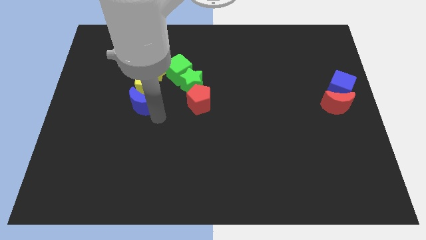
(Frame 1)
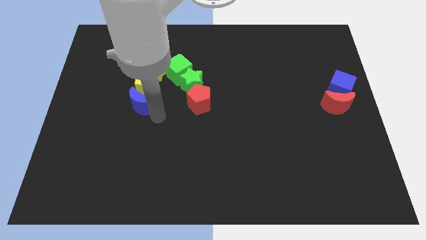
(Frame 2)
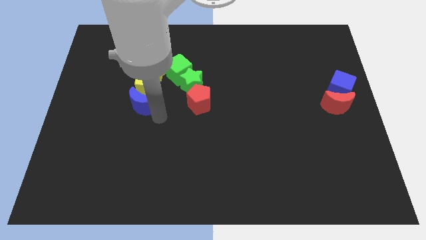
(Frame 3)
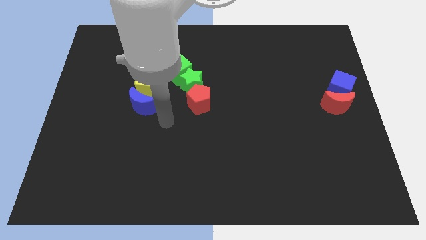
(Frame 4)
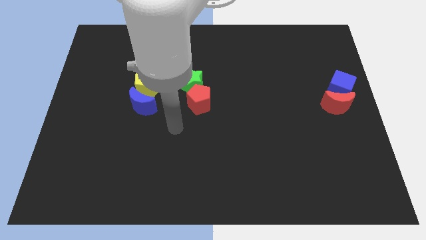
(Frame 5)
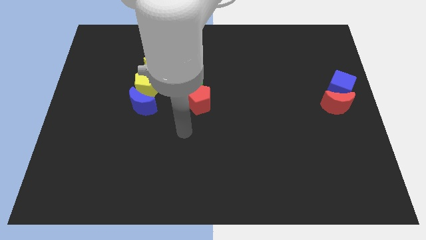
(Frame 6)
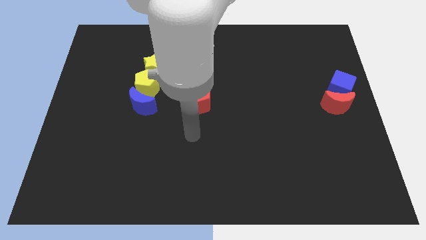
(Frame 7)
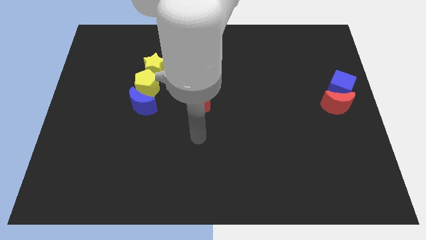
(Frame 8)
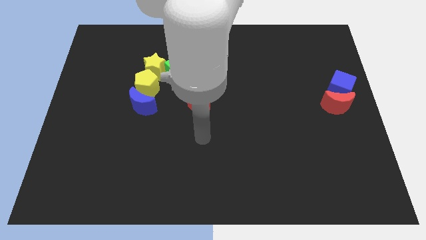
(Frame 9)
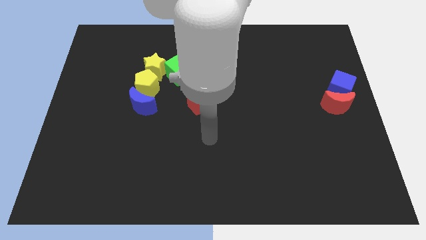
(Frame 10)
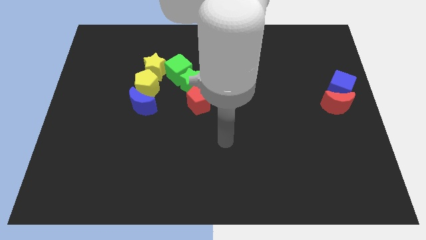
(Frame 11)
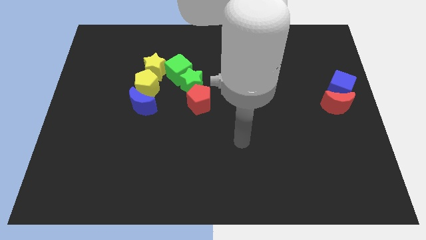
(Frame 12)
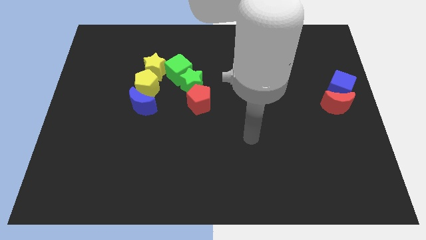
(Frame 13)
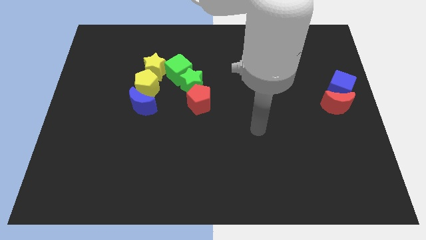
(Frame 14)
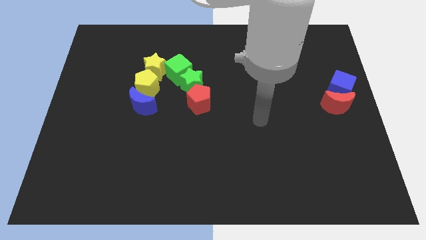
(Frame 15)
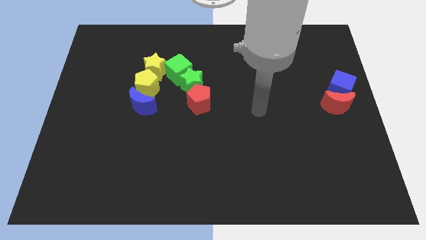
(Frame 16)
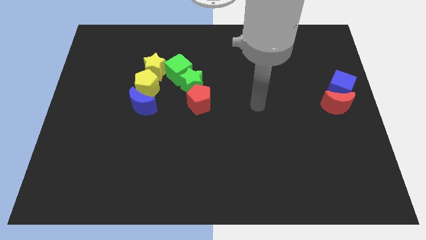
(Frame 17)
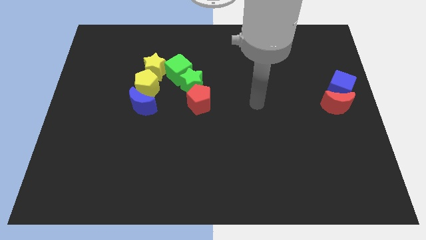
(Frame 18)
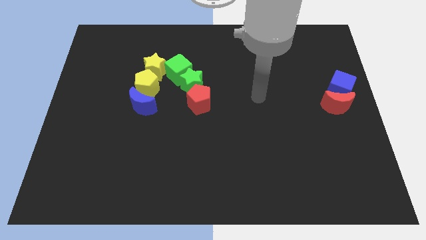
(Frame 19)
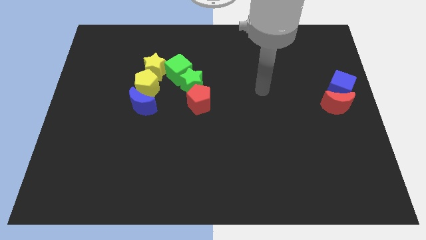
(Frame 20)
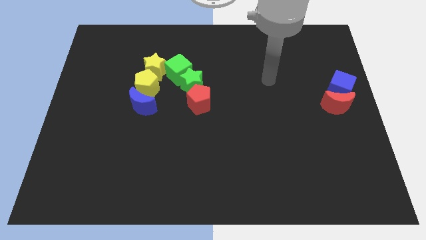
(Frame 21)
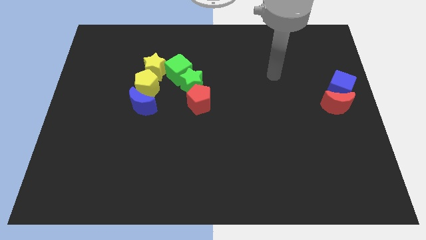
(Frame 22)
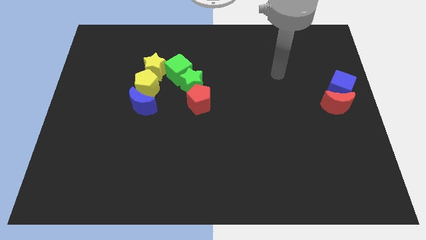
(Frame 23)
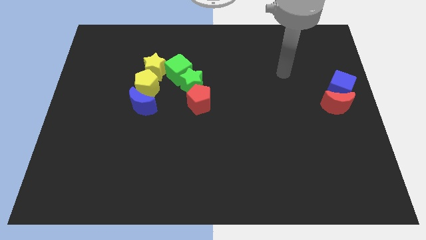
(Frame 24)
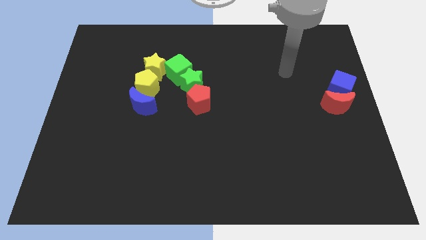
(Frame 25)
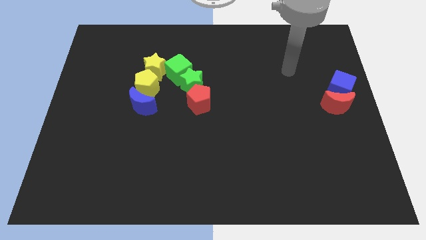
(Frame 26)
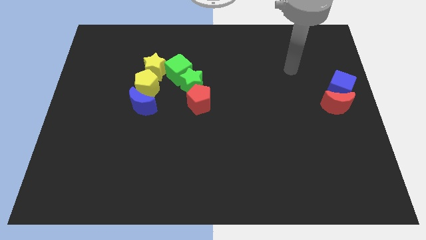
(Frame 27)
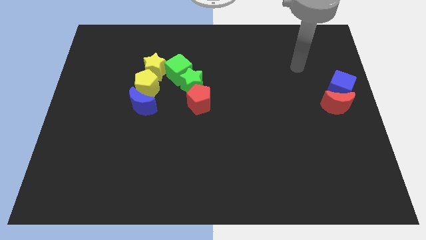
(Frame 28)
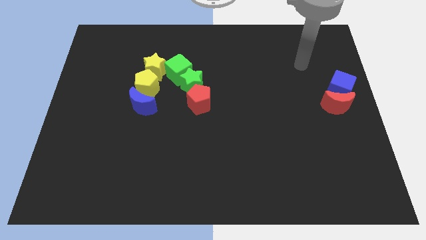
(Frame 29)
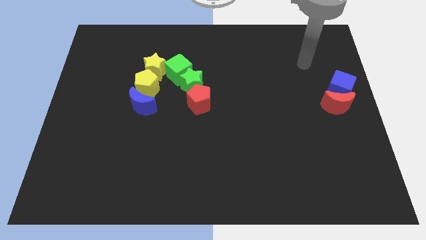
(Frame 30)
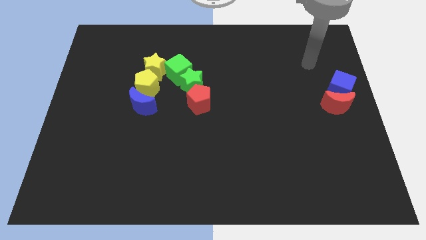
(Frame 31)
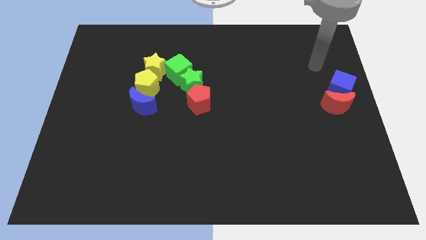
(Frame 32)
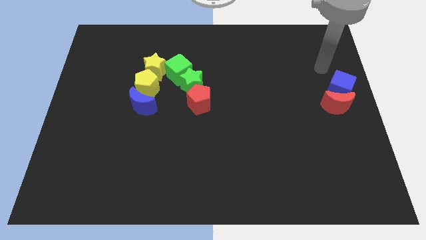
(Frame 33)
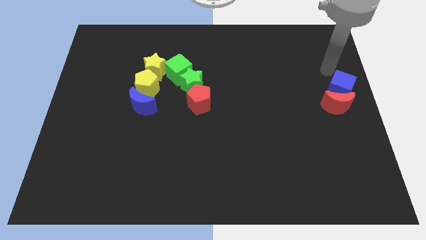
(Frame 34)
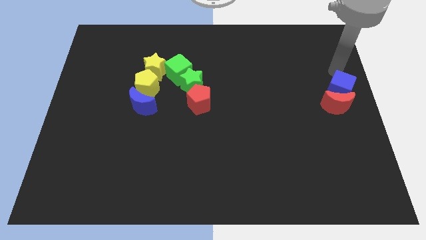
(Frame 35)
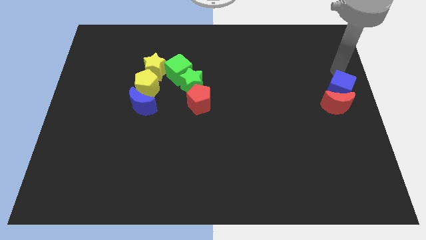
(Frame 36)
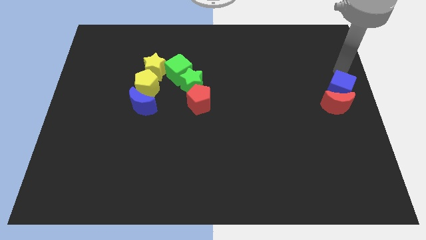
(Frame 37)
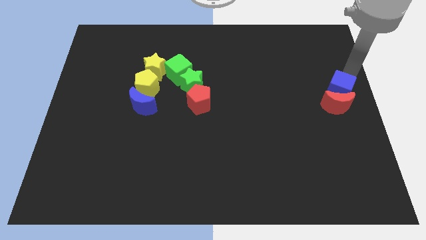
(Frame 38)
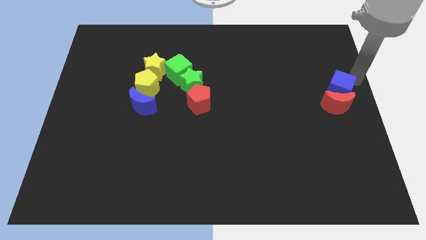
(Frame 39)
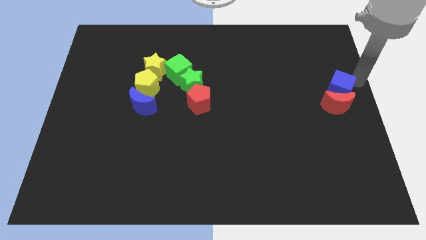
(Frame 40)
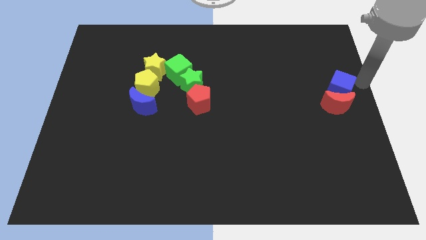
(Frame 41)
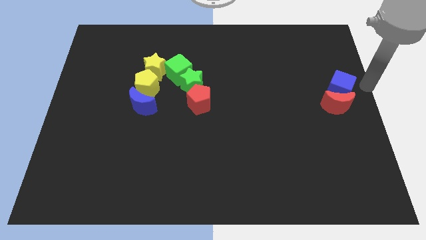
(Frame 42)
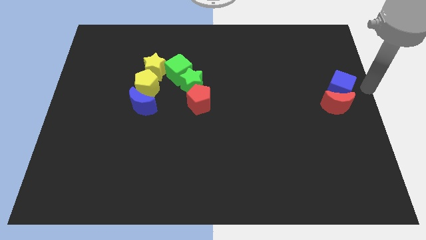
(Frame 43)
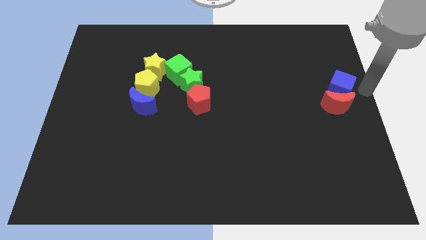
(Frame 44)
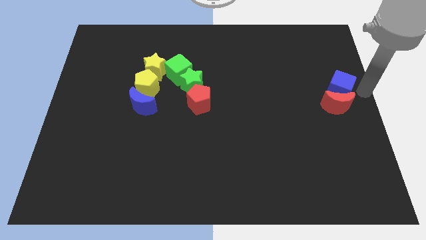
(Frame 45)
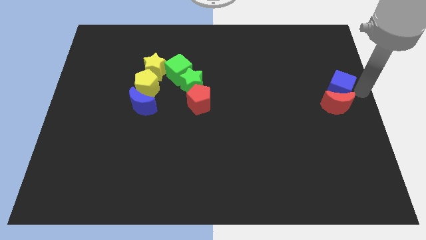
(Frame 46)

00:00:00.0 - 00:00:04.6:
move your arm towards blue cube

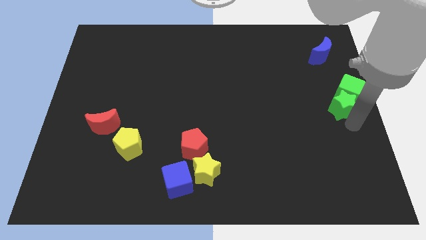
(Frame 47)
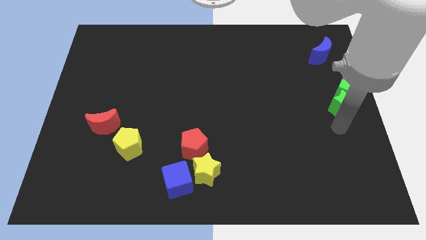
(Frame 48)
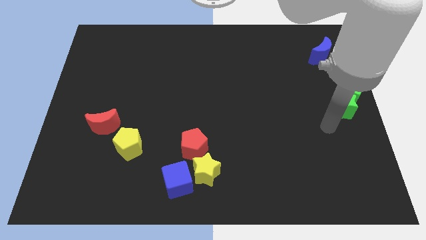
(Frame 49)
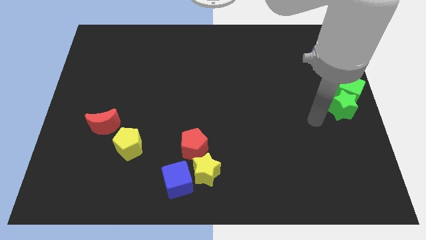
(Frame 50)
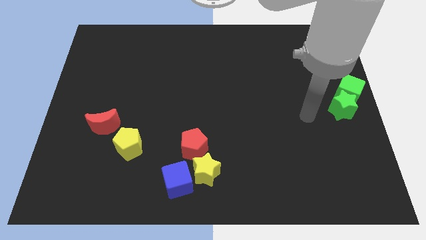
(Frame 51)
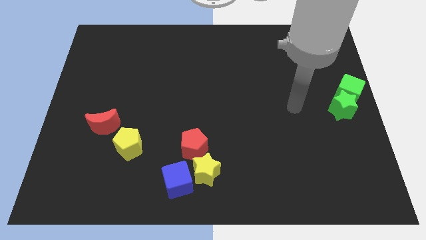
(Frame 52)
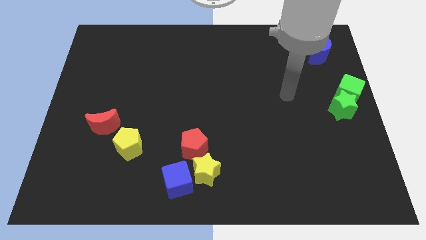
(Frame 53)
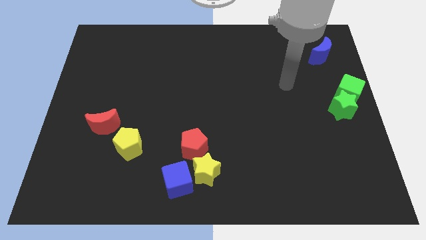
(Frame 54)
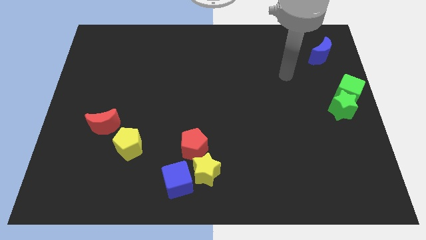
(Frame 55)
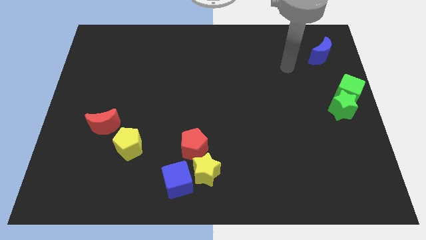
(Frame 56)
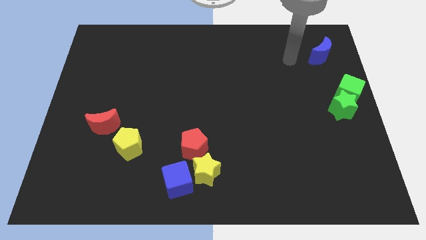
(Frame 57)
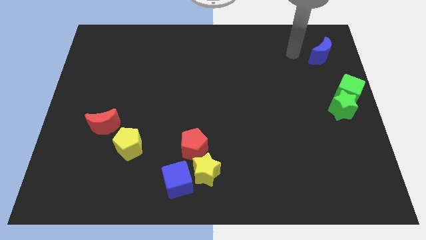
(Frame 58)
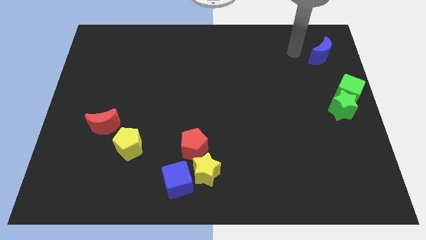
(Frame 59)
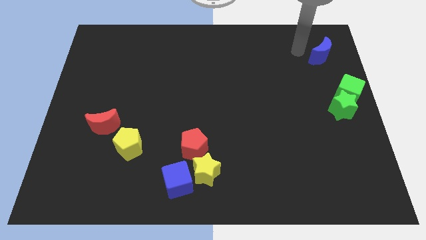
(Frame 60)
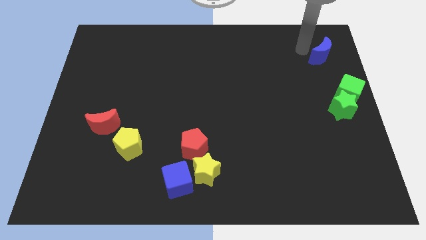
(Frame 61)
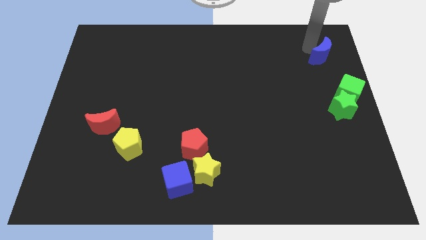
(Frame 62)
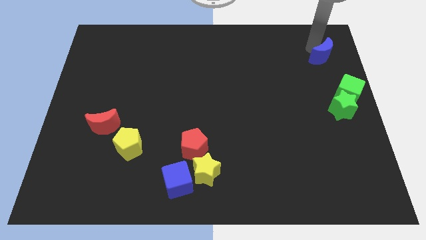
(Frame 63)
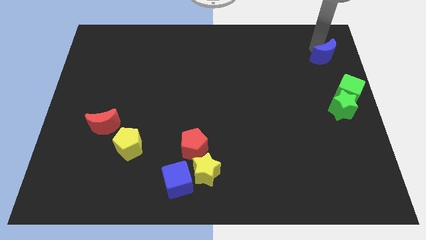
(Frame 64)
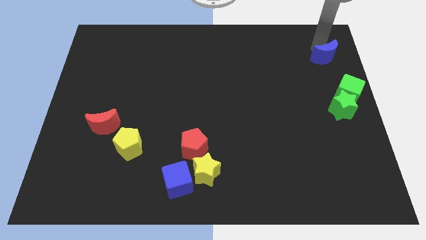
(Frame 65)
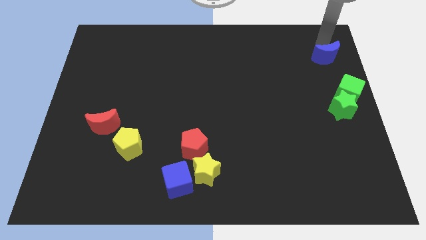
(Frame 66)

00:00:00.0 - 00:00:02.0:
move your arm towards the blue crescent

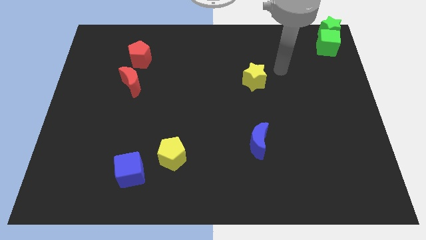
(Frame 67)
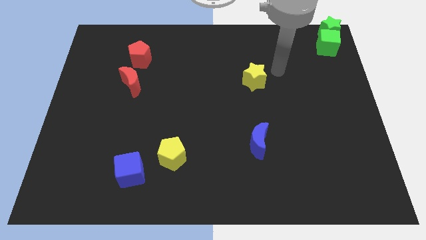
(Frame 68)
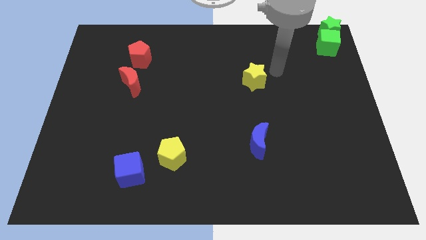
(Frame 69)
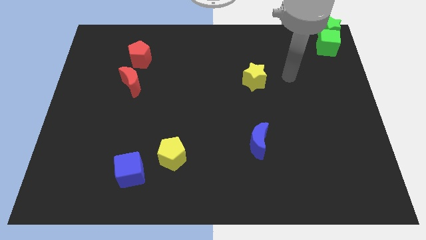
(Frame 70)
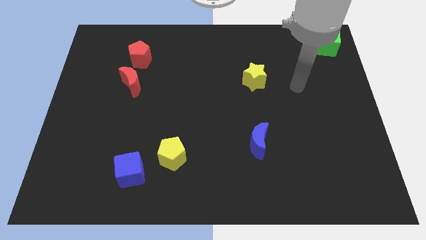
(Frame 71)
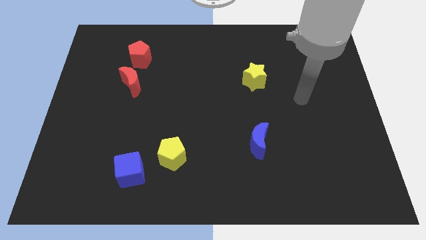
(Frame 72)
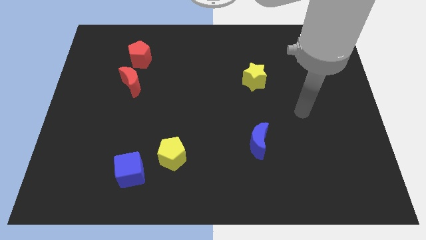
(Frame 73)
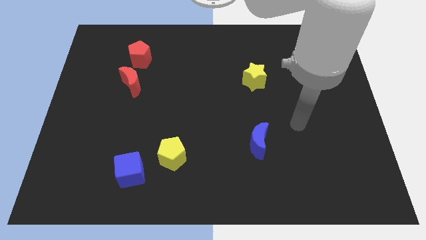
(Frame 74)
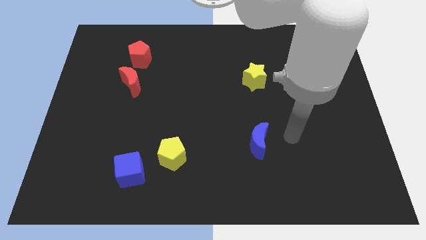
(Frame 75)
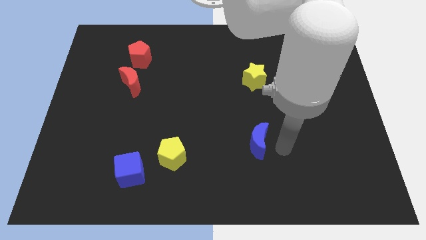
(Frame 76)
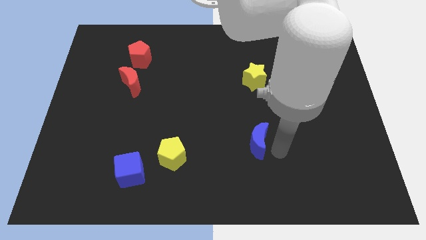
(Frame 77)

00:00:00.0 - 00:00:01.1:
place your arm at the right of the blue crescent

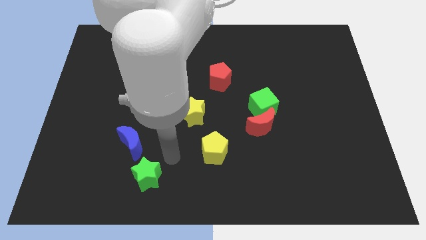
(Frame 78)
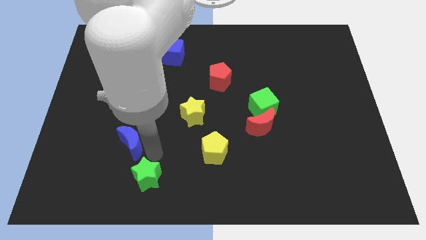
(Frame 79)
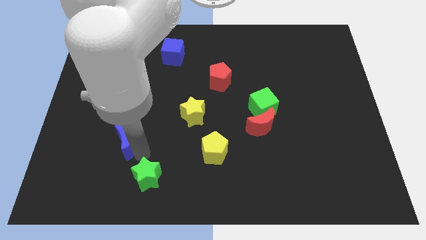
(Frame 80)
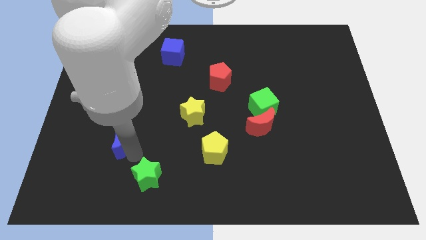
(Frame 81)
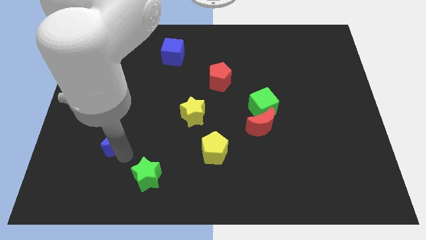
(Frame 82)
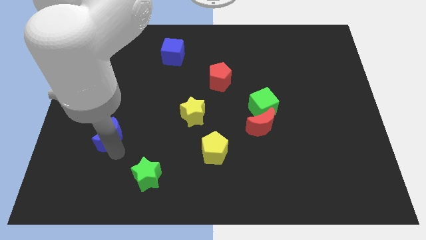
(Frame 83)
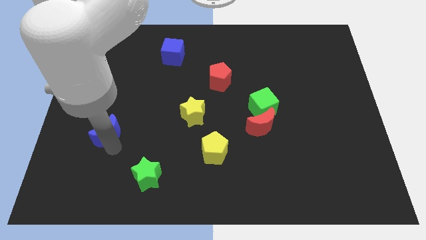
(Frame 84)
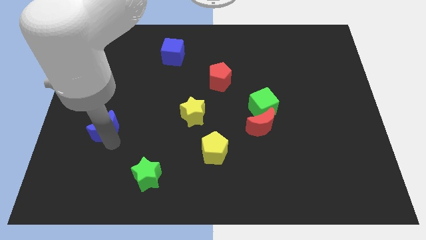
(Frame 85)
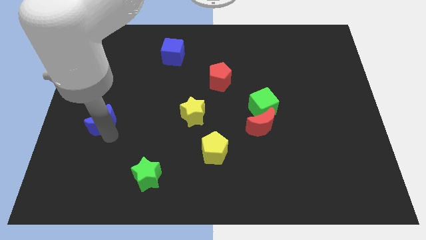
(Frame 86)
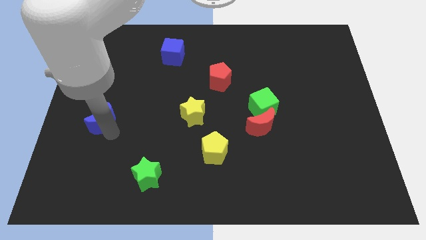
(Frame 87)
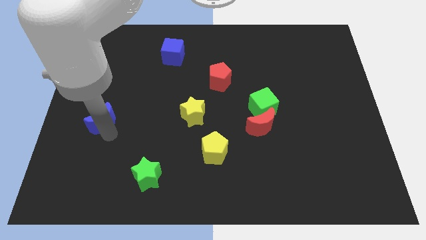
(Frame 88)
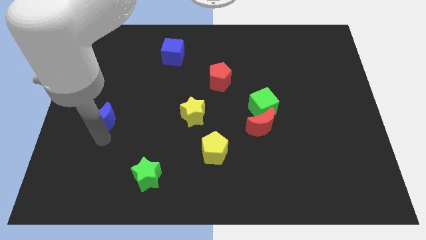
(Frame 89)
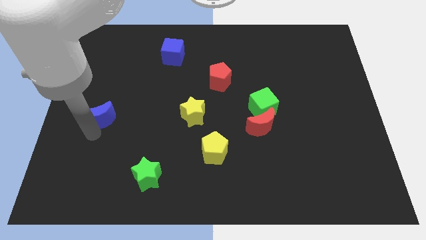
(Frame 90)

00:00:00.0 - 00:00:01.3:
push the blue moon to the horizontal left of the yellow star
